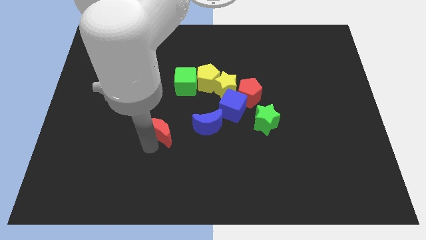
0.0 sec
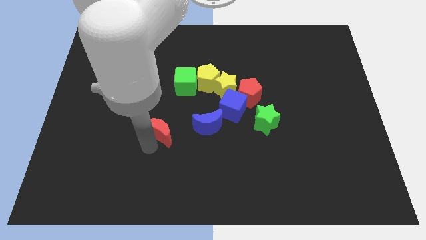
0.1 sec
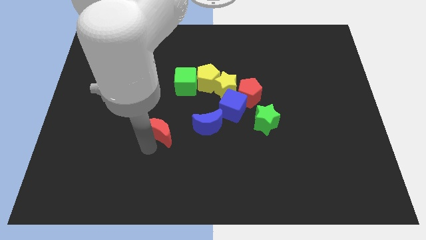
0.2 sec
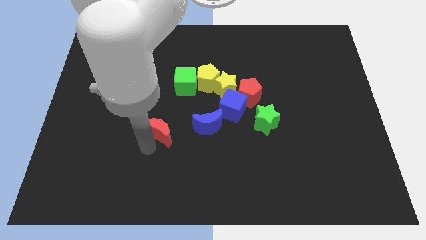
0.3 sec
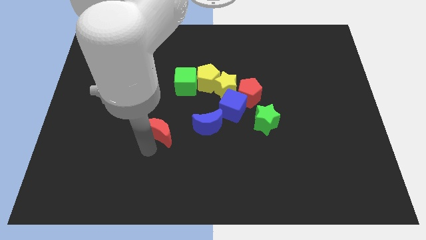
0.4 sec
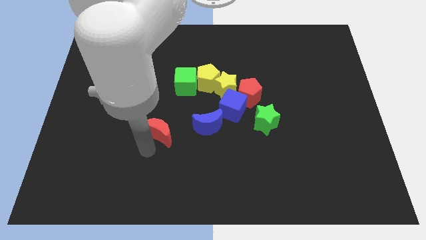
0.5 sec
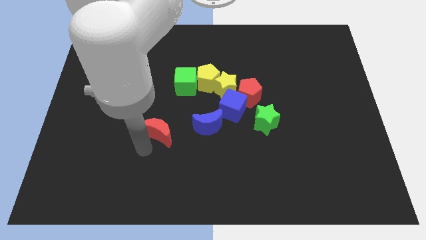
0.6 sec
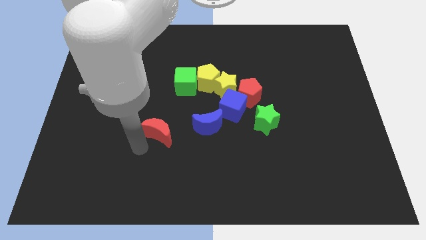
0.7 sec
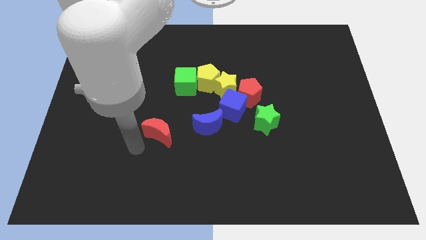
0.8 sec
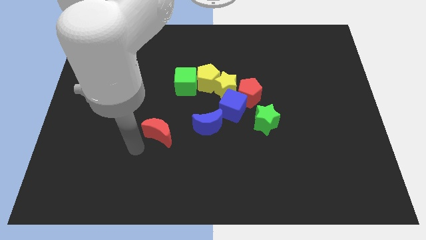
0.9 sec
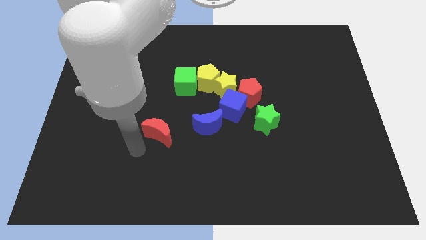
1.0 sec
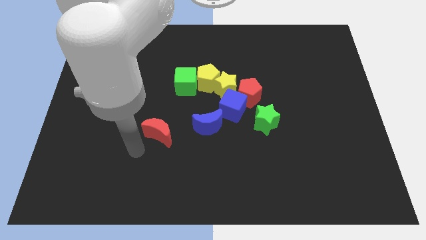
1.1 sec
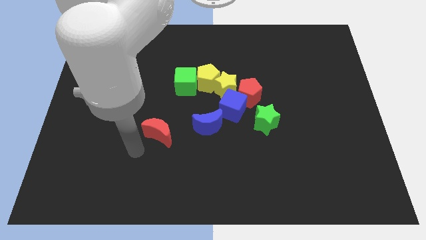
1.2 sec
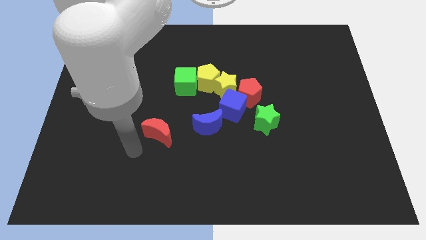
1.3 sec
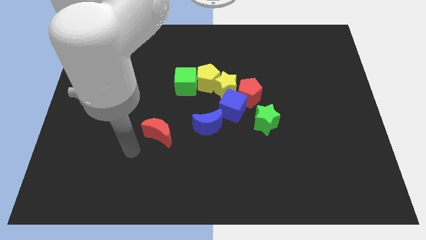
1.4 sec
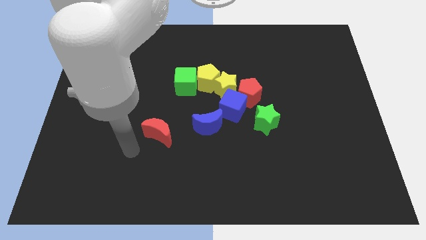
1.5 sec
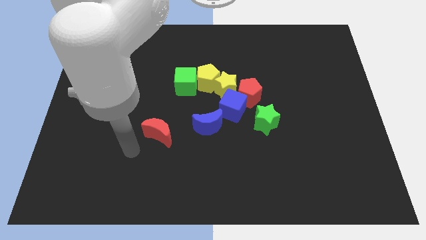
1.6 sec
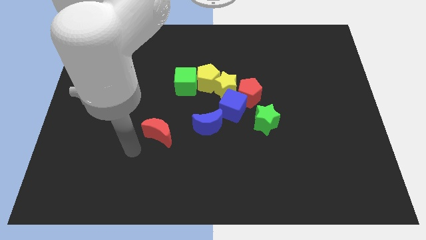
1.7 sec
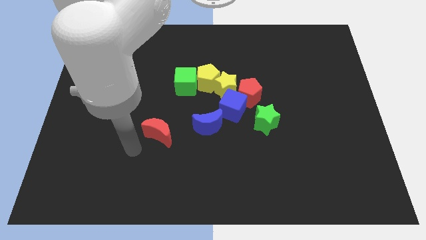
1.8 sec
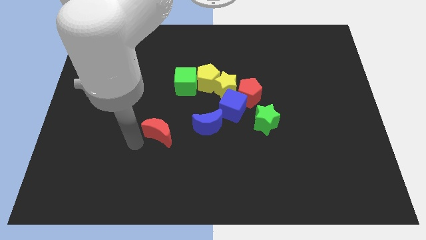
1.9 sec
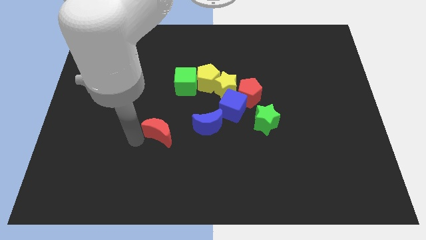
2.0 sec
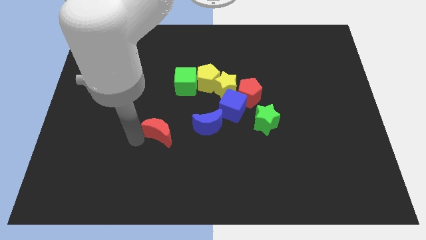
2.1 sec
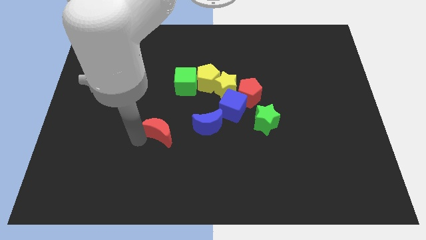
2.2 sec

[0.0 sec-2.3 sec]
move the arm towards the red moon

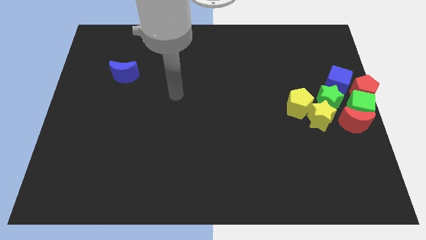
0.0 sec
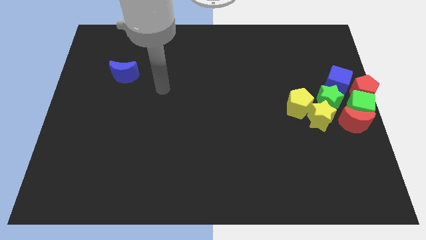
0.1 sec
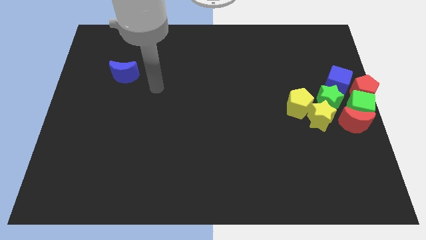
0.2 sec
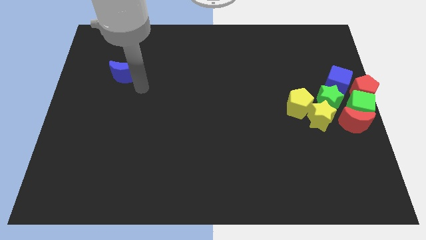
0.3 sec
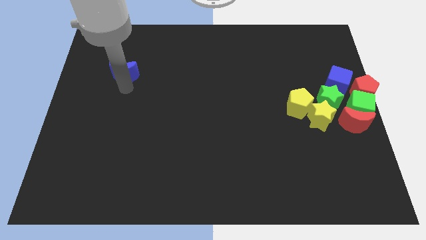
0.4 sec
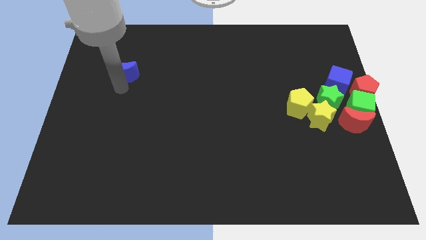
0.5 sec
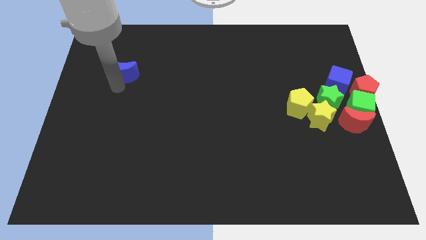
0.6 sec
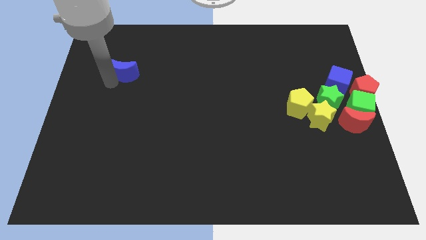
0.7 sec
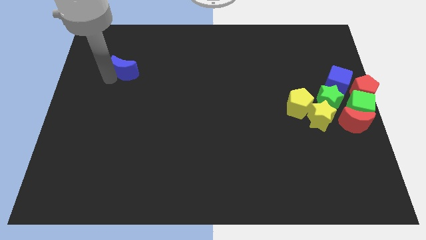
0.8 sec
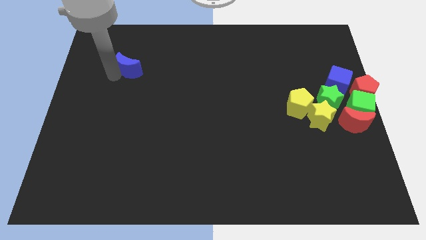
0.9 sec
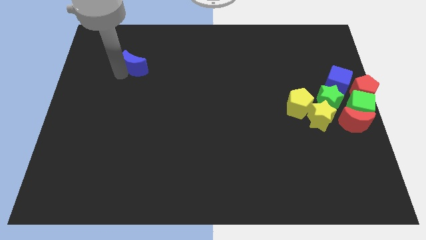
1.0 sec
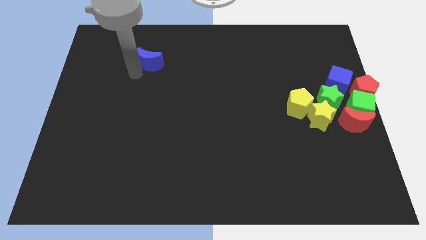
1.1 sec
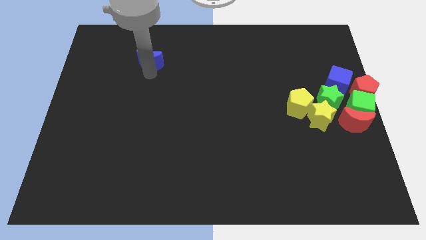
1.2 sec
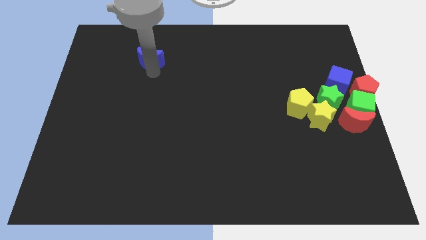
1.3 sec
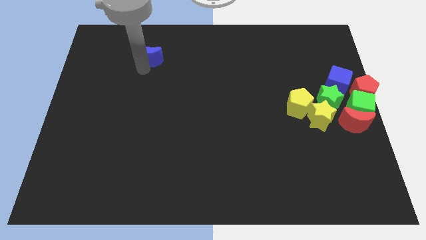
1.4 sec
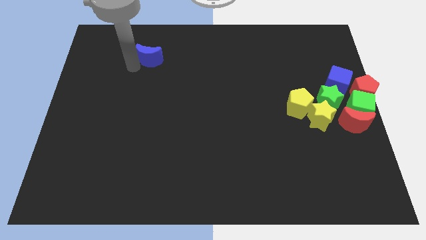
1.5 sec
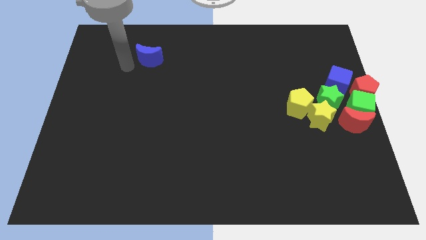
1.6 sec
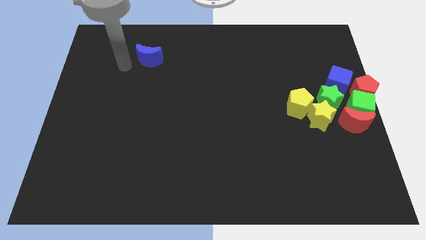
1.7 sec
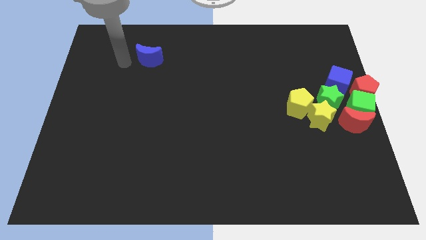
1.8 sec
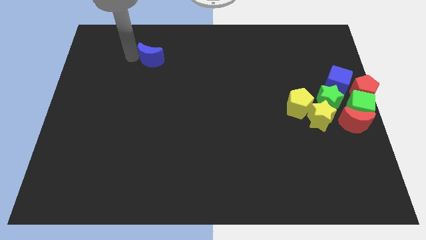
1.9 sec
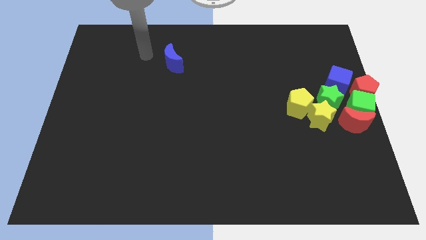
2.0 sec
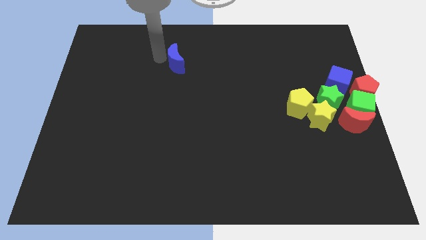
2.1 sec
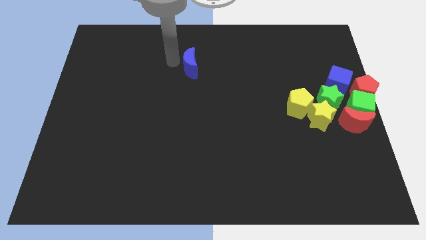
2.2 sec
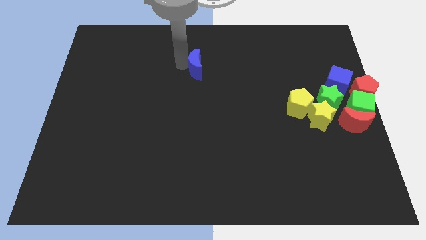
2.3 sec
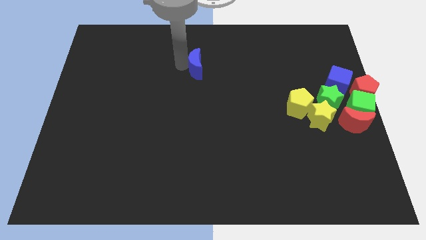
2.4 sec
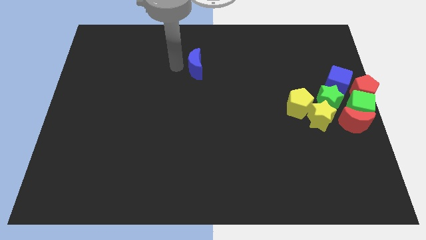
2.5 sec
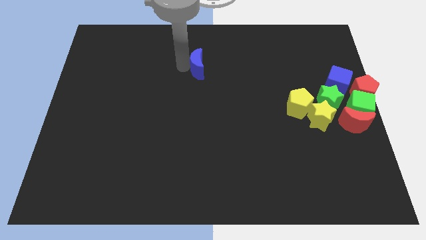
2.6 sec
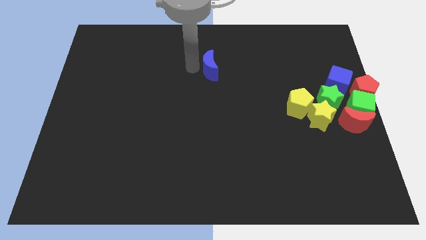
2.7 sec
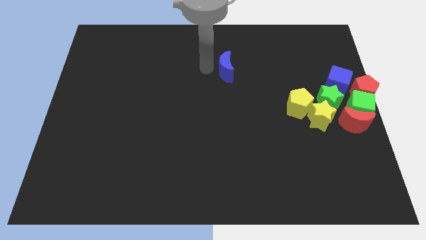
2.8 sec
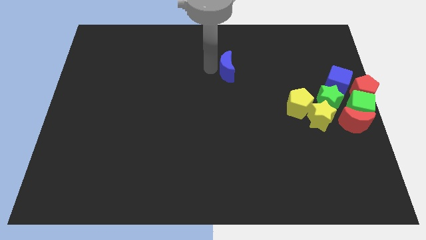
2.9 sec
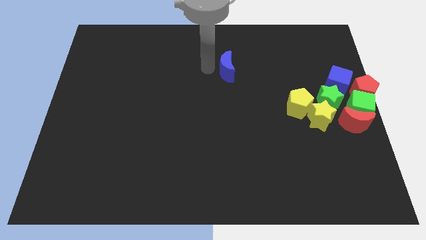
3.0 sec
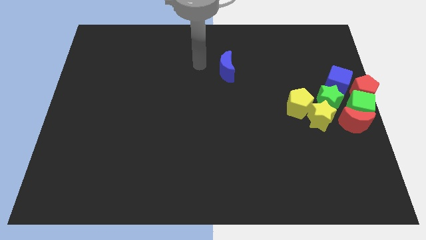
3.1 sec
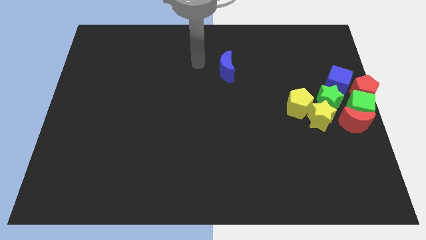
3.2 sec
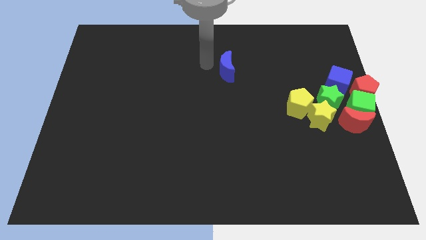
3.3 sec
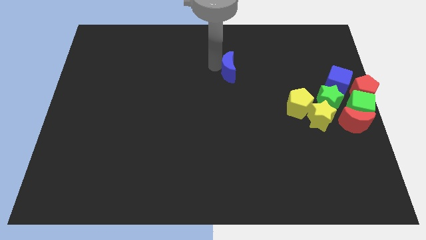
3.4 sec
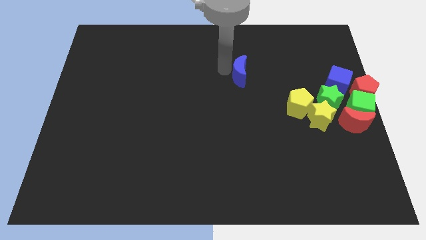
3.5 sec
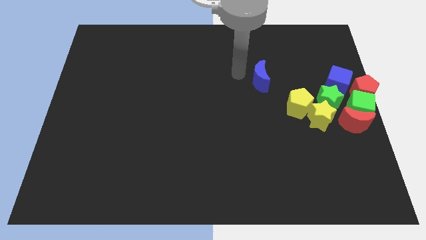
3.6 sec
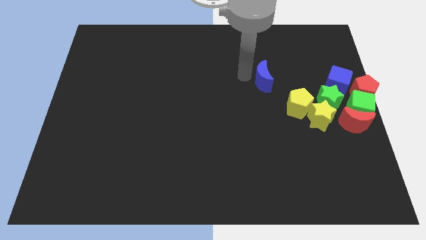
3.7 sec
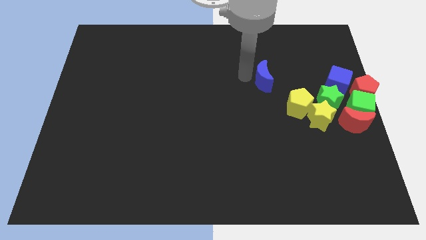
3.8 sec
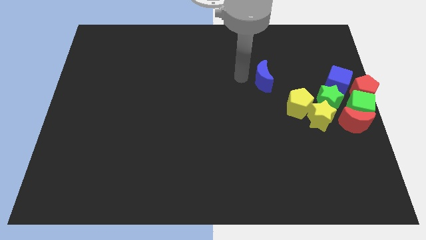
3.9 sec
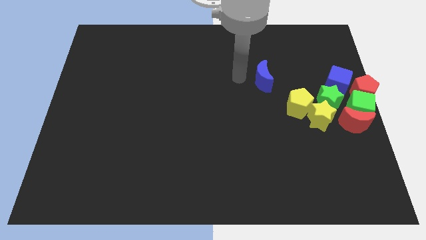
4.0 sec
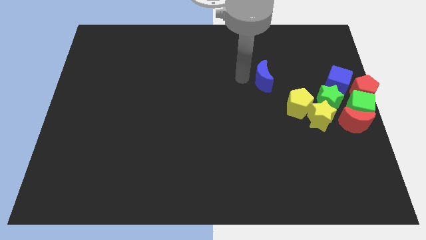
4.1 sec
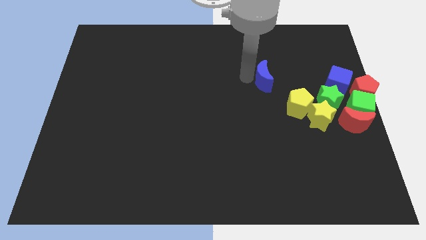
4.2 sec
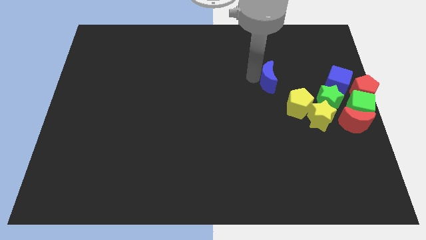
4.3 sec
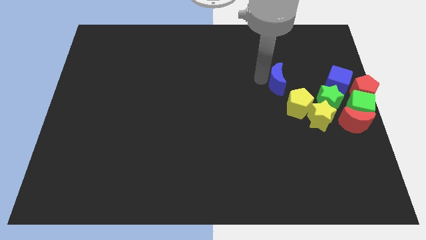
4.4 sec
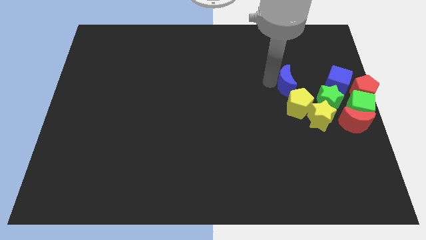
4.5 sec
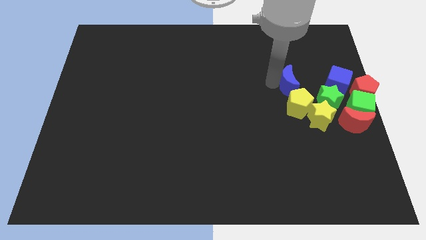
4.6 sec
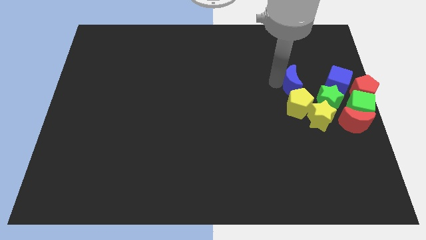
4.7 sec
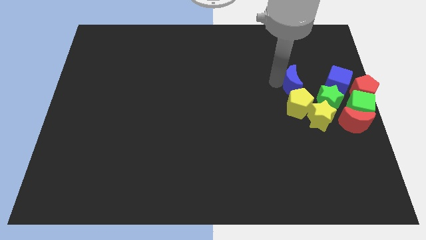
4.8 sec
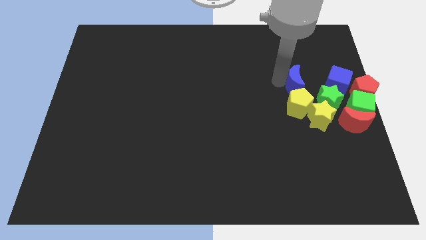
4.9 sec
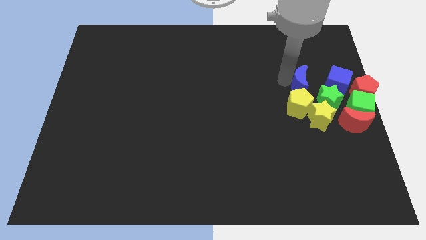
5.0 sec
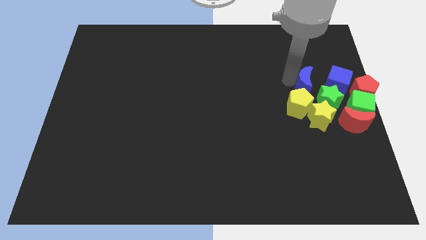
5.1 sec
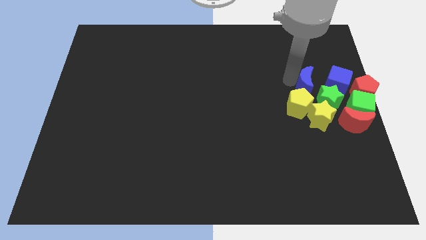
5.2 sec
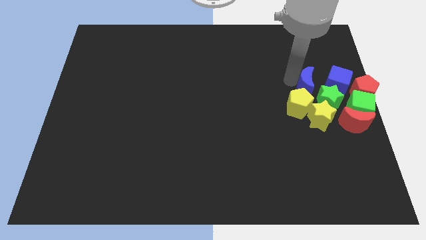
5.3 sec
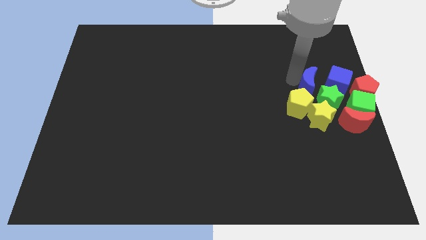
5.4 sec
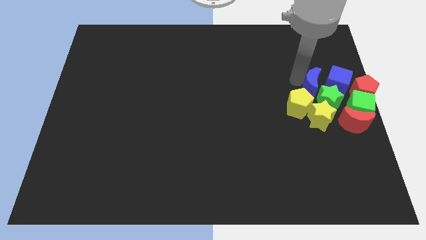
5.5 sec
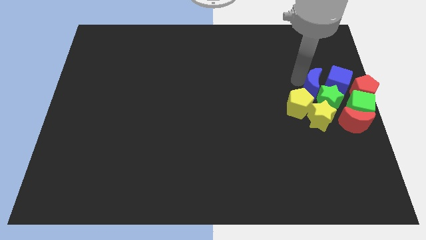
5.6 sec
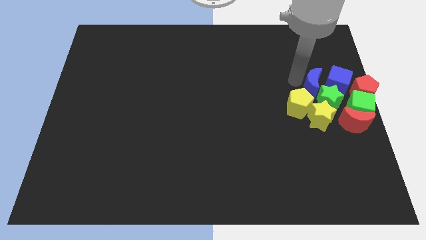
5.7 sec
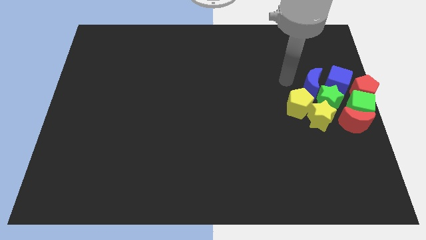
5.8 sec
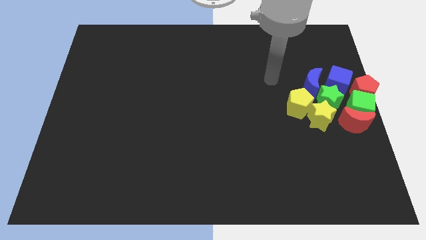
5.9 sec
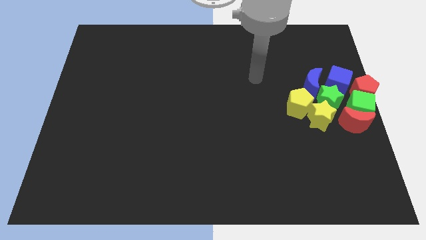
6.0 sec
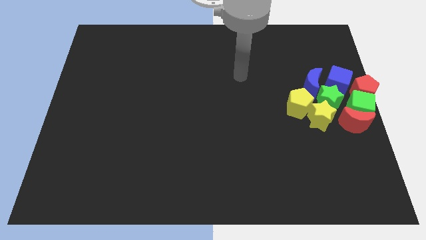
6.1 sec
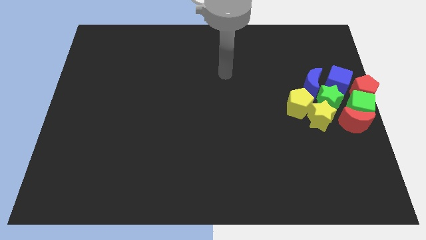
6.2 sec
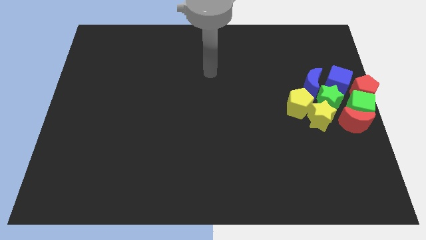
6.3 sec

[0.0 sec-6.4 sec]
move the blue moon top right to the yellow pentagon

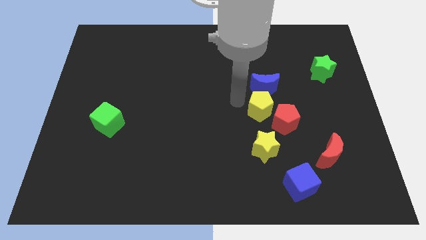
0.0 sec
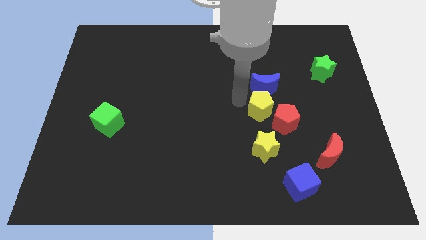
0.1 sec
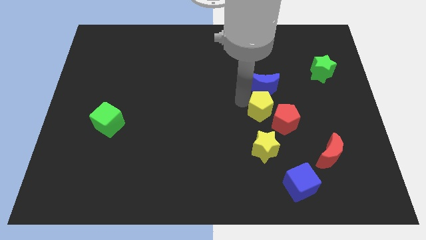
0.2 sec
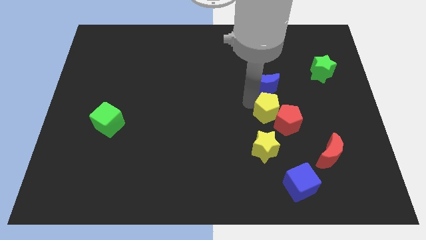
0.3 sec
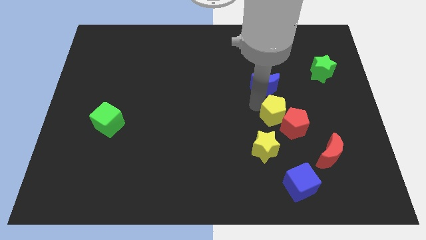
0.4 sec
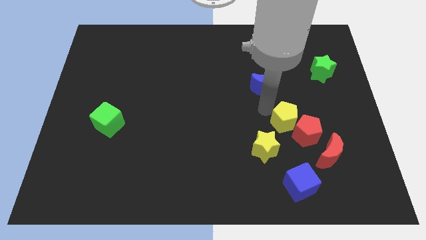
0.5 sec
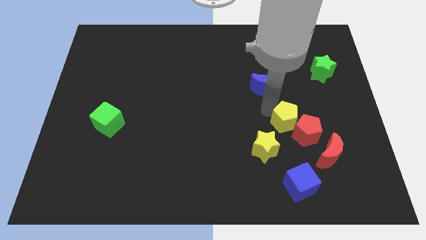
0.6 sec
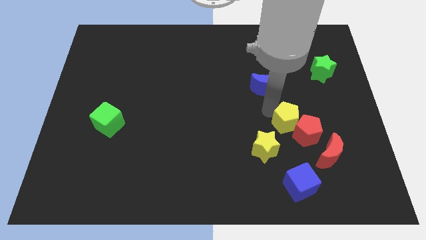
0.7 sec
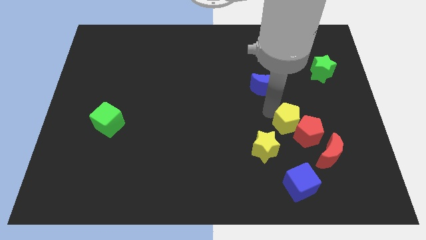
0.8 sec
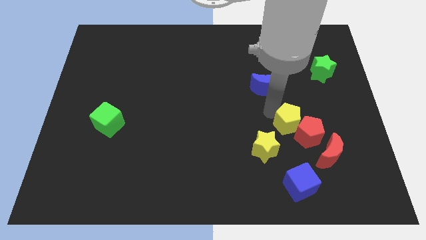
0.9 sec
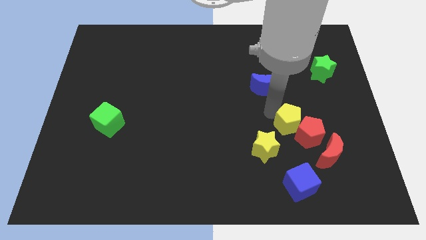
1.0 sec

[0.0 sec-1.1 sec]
push yellow pentagon in to red pentagon
